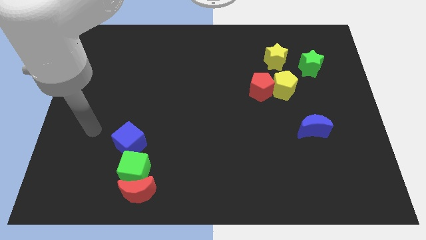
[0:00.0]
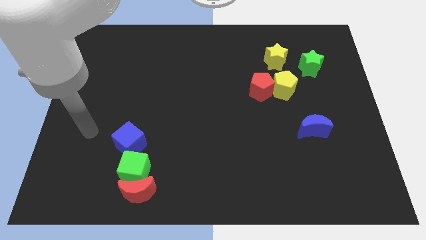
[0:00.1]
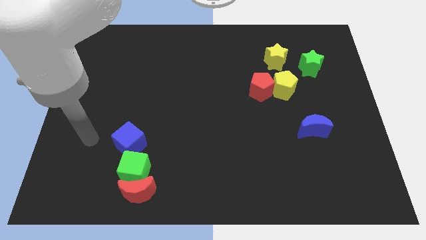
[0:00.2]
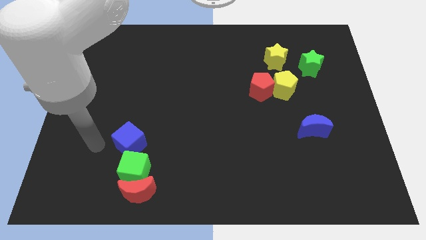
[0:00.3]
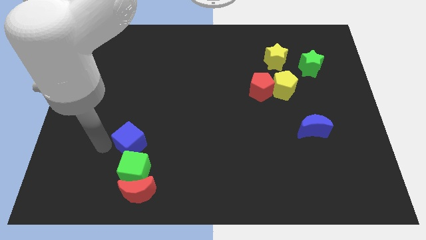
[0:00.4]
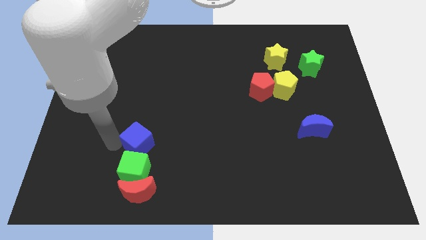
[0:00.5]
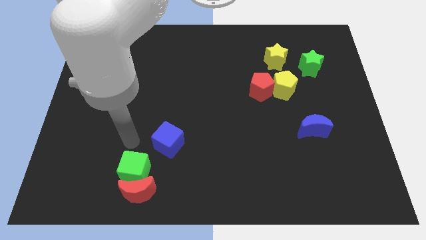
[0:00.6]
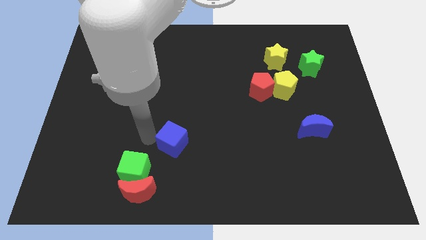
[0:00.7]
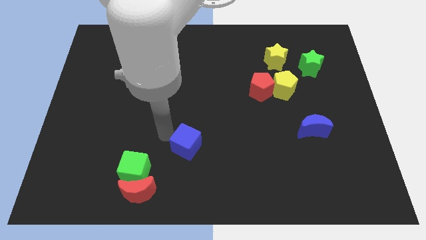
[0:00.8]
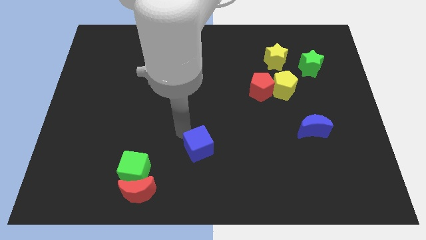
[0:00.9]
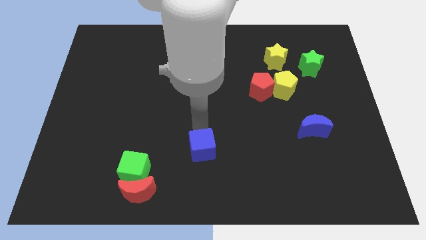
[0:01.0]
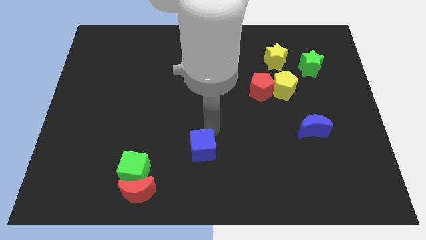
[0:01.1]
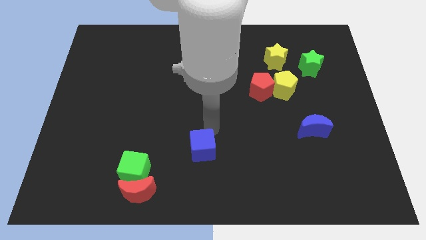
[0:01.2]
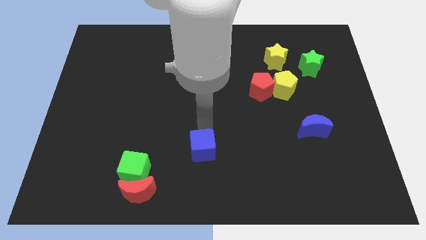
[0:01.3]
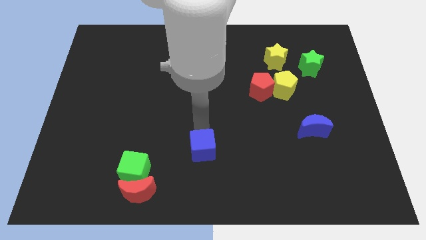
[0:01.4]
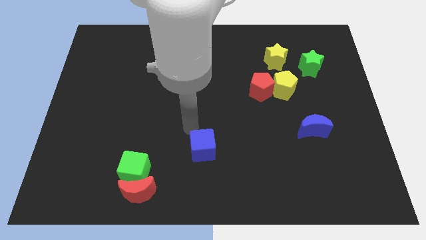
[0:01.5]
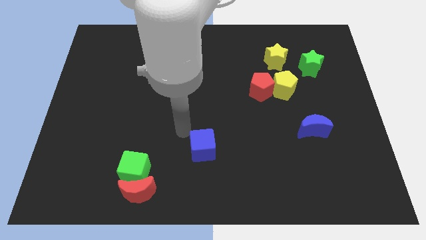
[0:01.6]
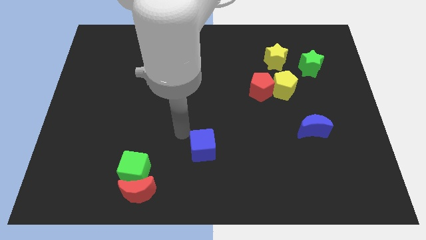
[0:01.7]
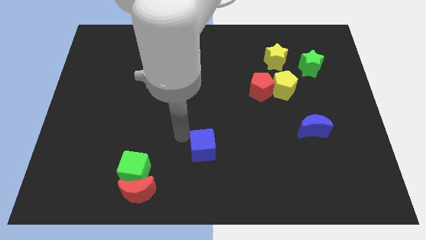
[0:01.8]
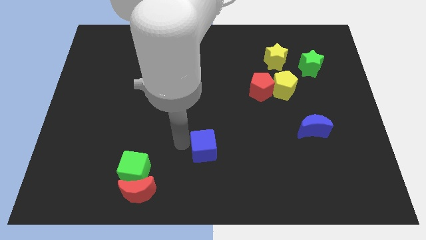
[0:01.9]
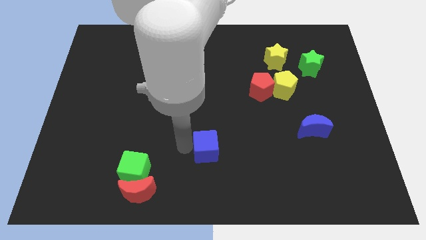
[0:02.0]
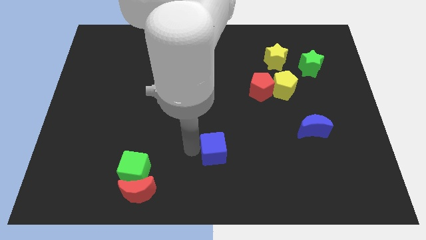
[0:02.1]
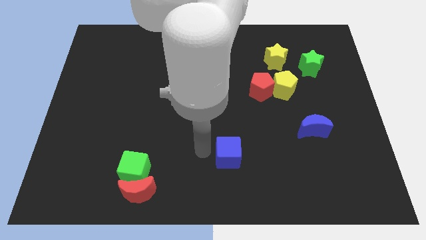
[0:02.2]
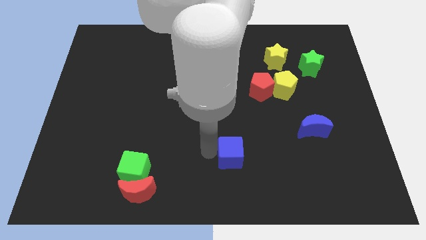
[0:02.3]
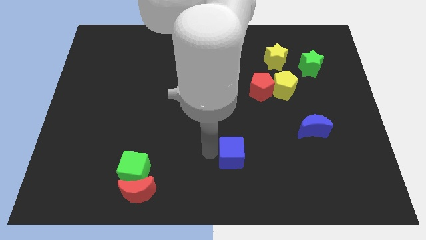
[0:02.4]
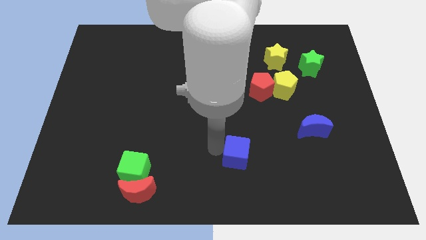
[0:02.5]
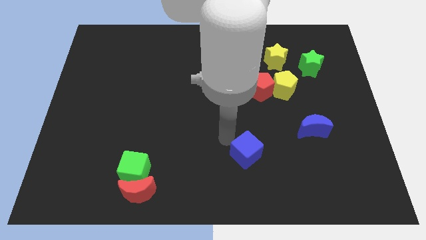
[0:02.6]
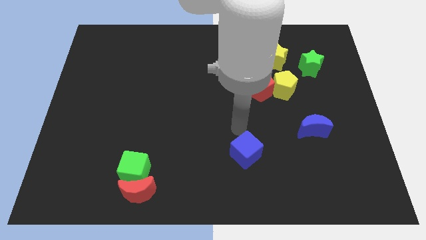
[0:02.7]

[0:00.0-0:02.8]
place blue cube below red pentagon

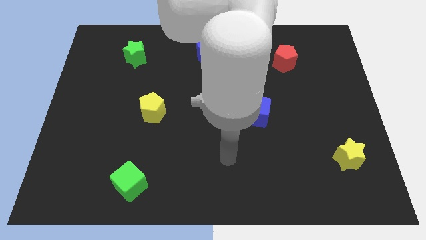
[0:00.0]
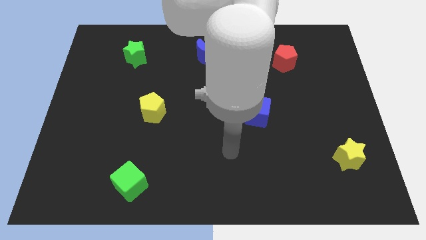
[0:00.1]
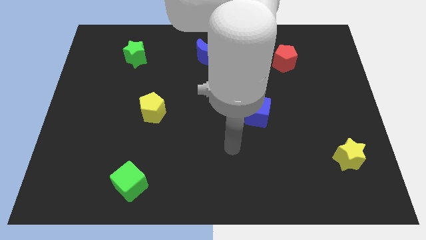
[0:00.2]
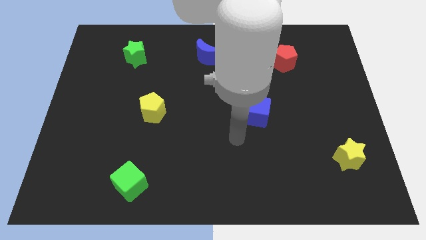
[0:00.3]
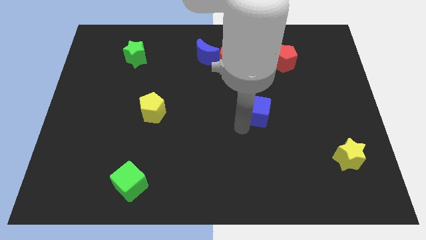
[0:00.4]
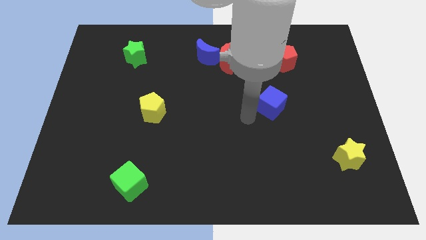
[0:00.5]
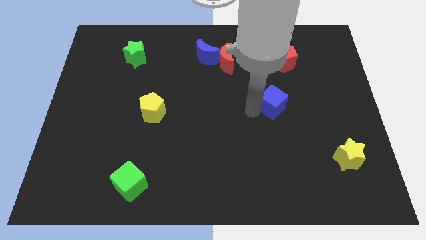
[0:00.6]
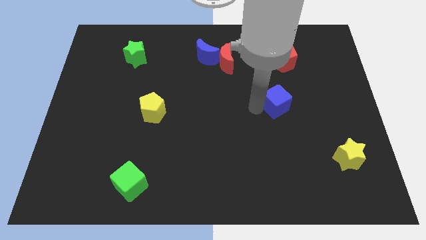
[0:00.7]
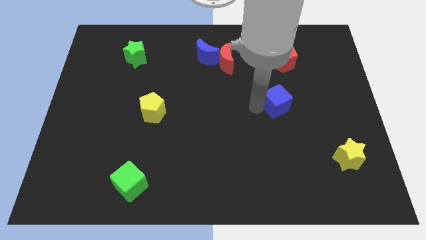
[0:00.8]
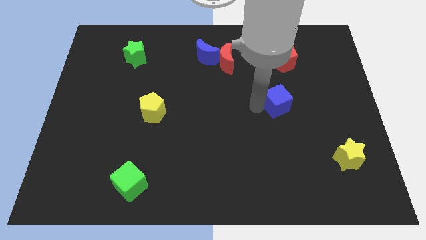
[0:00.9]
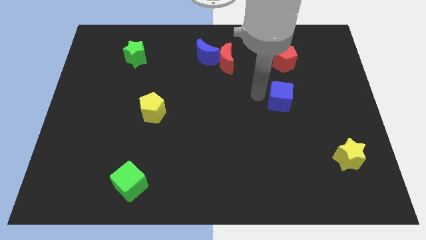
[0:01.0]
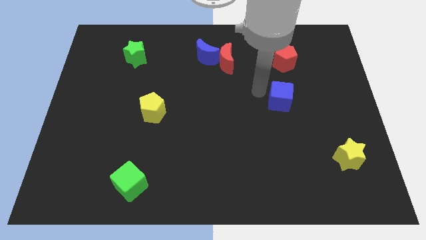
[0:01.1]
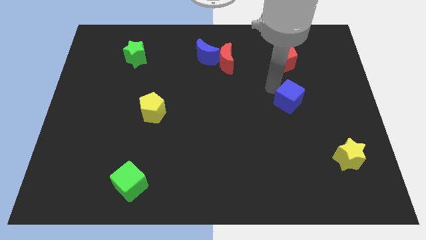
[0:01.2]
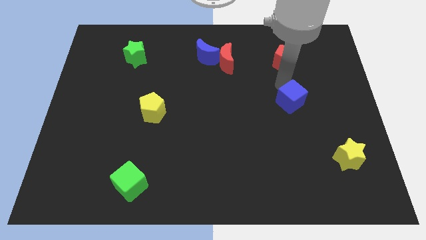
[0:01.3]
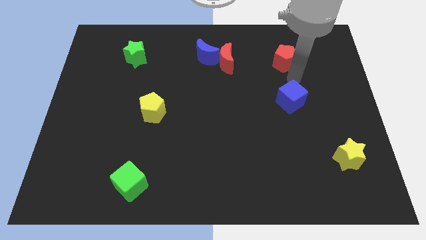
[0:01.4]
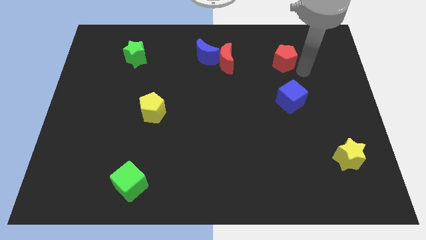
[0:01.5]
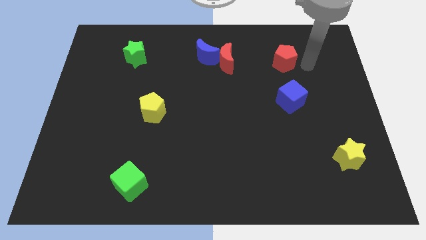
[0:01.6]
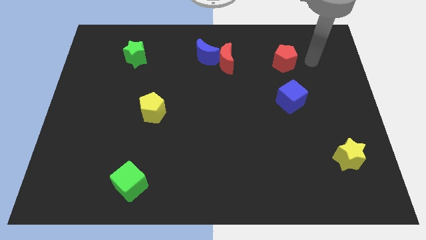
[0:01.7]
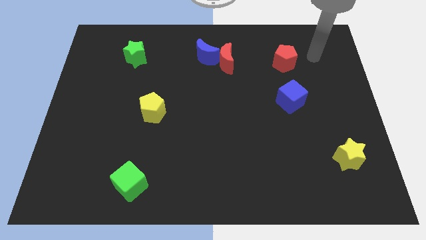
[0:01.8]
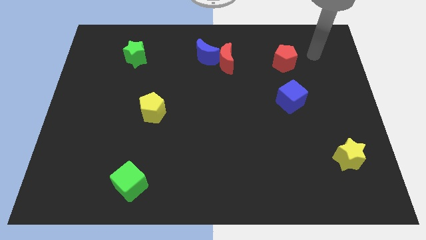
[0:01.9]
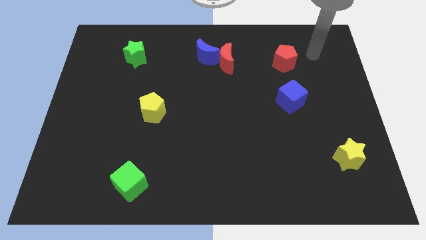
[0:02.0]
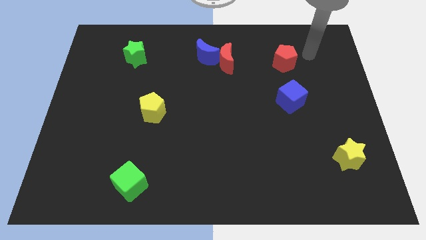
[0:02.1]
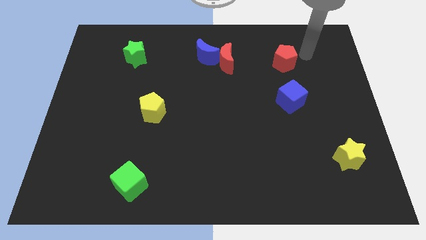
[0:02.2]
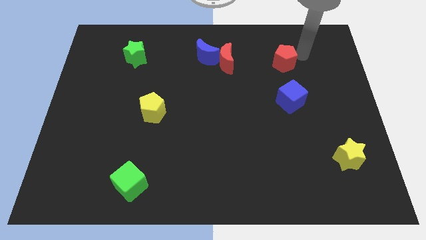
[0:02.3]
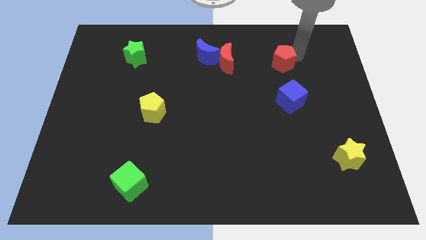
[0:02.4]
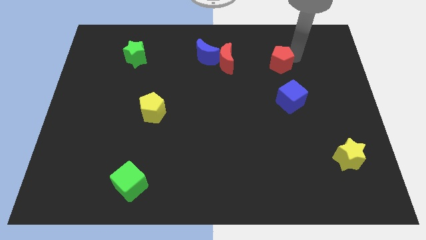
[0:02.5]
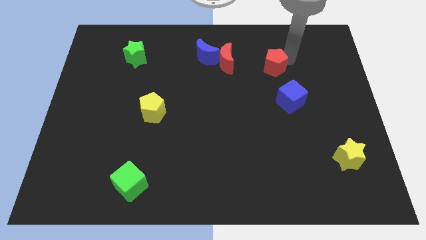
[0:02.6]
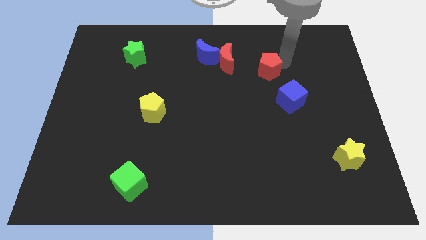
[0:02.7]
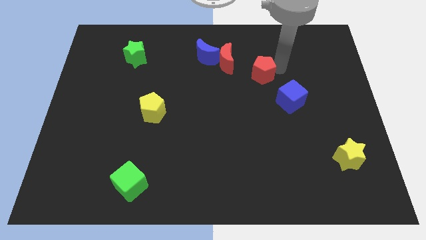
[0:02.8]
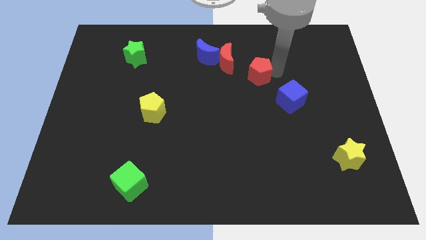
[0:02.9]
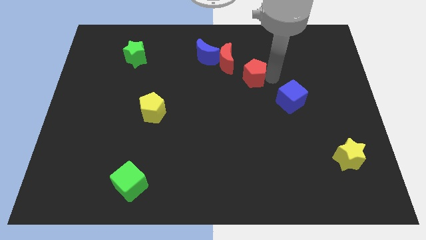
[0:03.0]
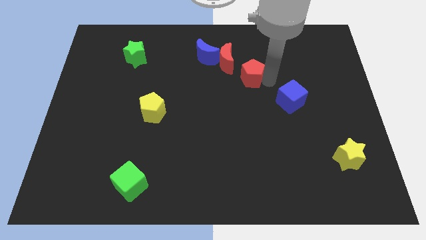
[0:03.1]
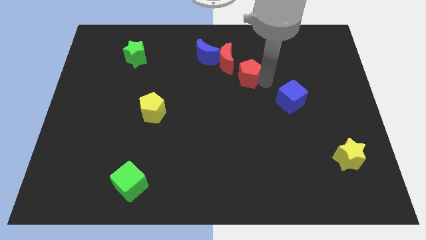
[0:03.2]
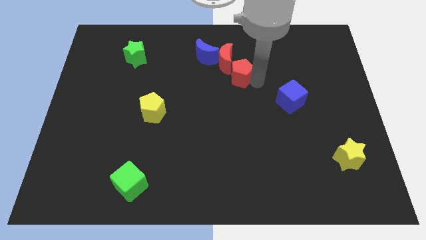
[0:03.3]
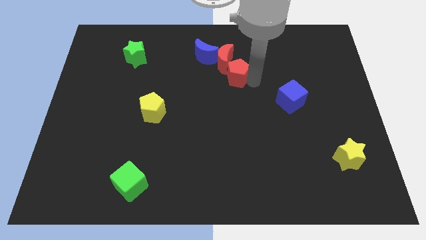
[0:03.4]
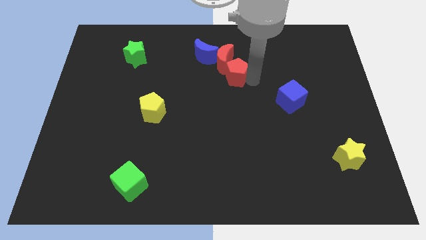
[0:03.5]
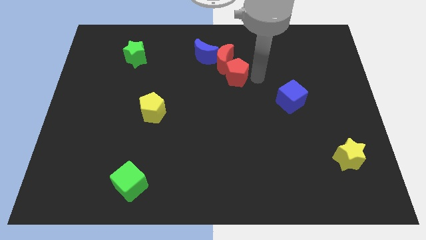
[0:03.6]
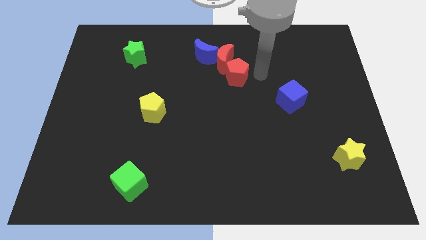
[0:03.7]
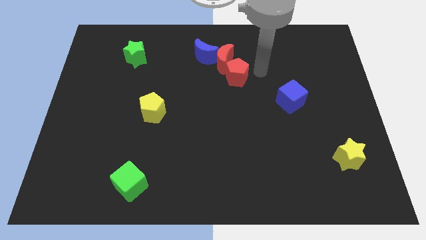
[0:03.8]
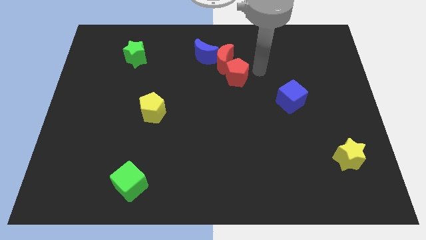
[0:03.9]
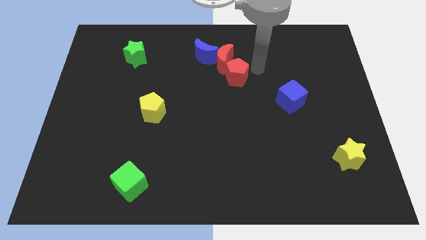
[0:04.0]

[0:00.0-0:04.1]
push the red pentagon into the red crescent

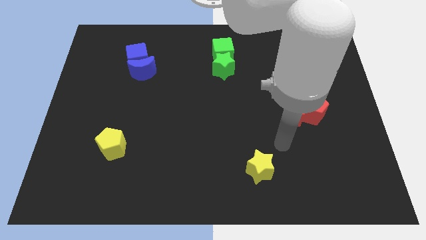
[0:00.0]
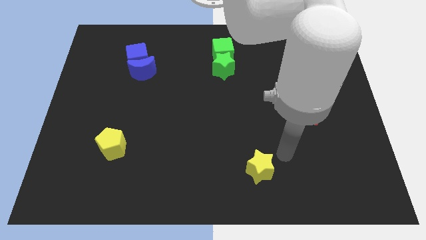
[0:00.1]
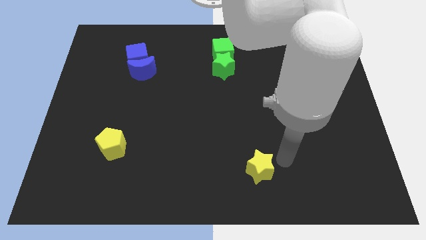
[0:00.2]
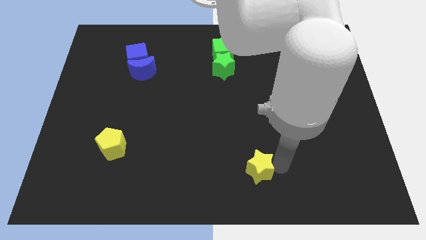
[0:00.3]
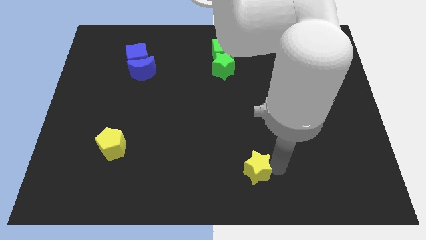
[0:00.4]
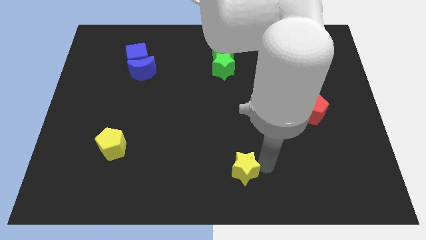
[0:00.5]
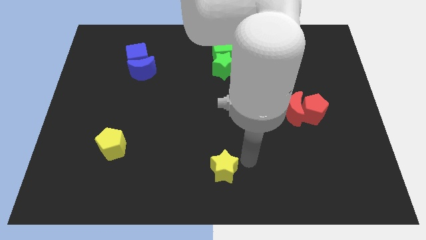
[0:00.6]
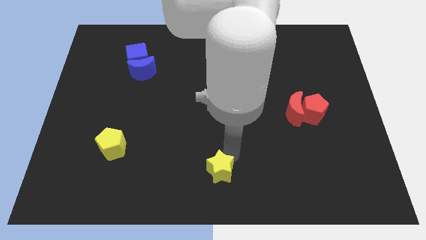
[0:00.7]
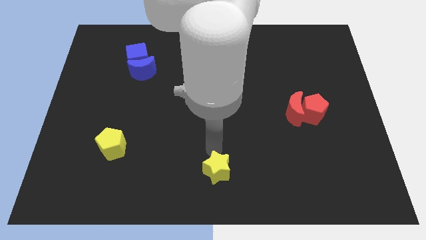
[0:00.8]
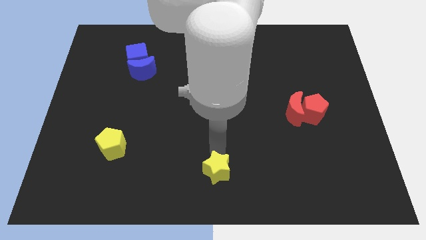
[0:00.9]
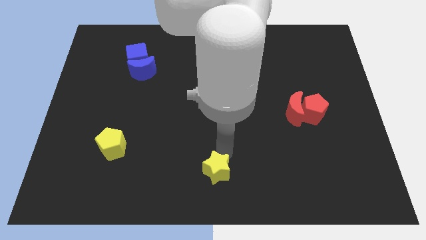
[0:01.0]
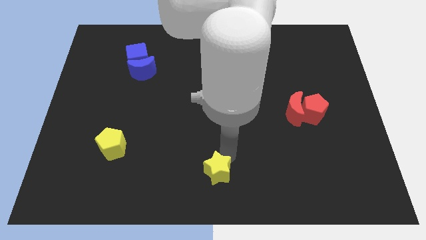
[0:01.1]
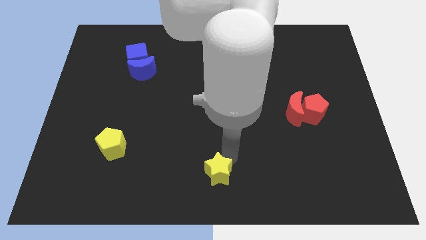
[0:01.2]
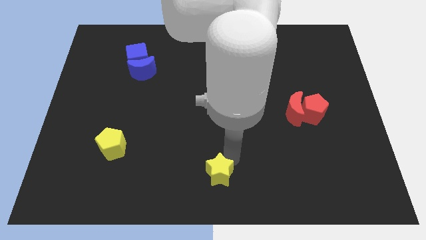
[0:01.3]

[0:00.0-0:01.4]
move the yellow star towards the bottom center of the board

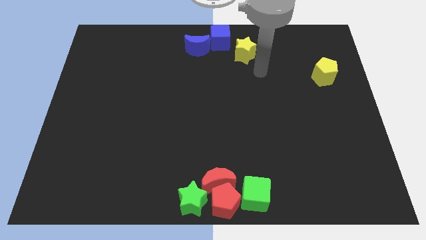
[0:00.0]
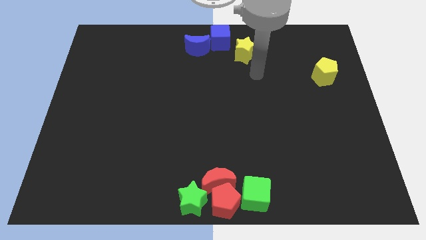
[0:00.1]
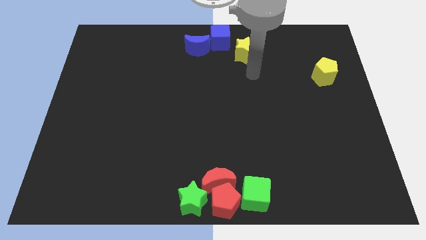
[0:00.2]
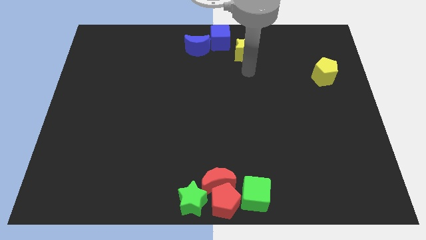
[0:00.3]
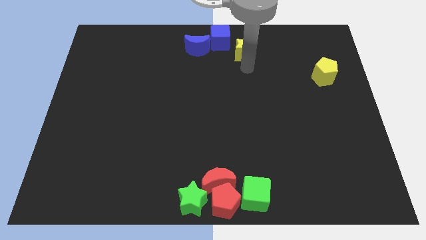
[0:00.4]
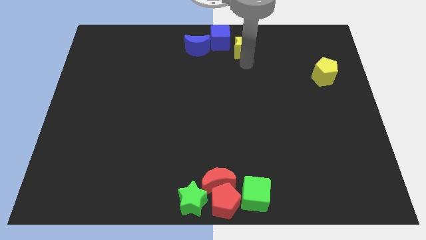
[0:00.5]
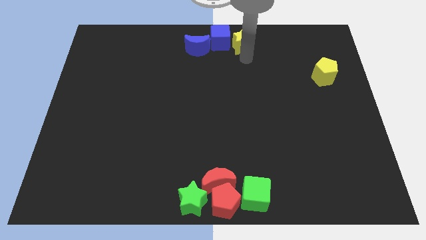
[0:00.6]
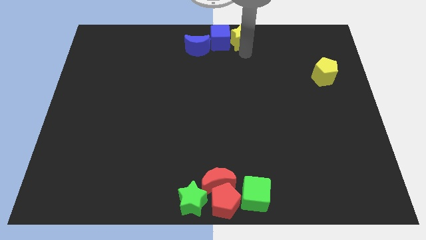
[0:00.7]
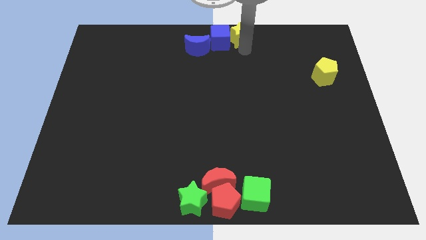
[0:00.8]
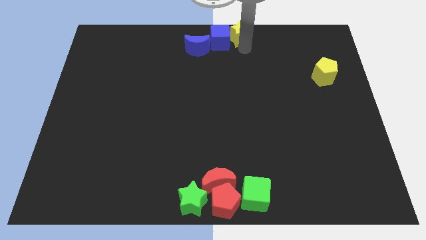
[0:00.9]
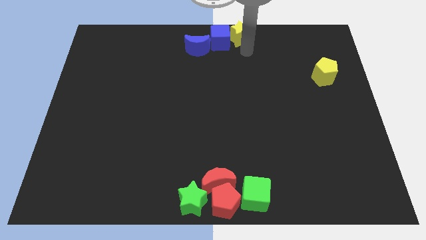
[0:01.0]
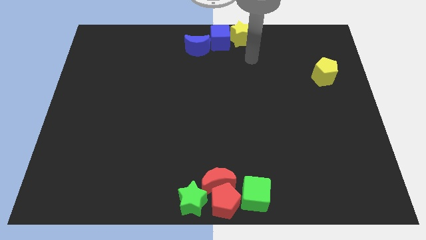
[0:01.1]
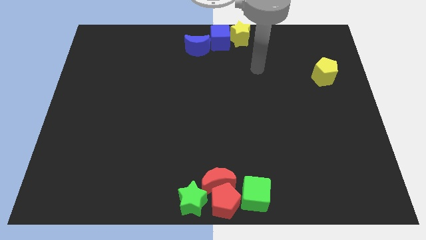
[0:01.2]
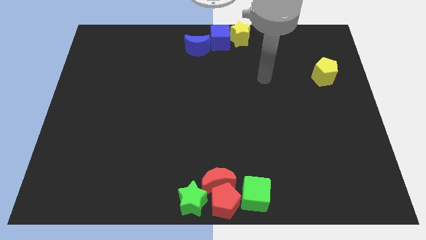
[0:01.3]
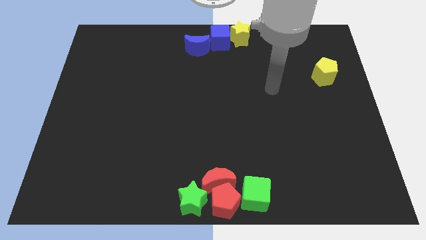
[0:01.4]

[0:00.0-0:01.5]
move the yellow star to the top right side of the blue cube
